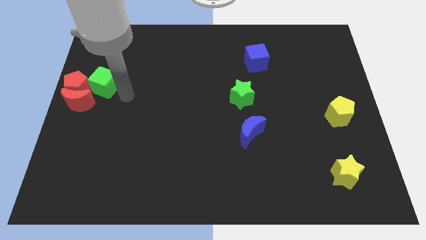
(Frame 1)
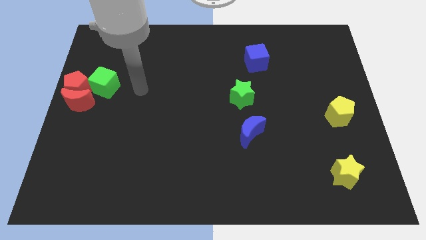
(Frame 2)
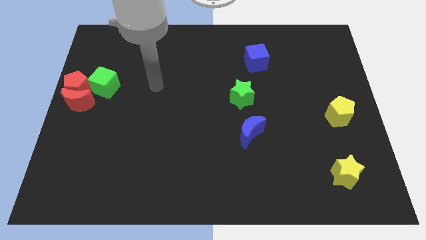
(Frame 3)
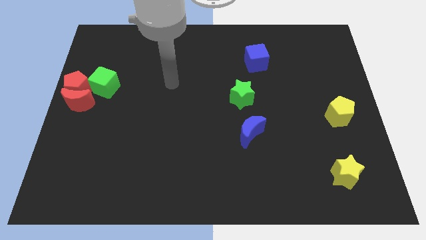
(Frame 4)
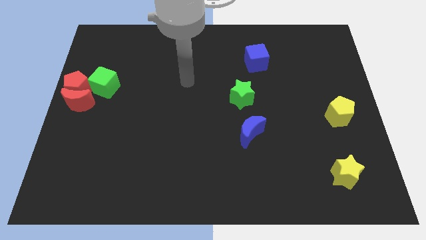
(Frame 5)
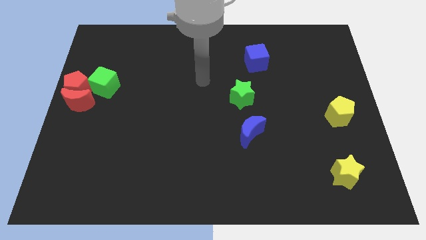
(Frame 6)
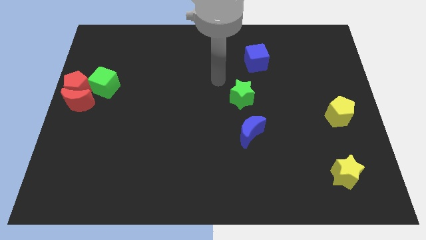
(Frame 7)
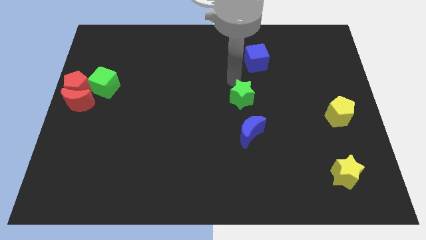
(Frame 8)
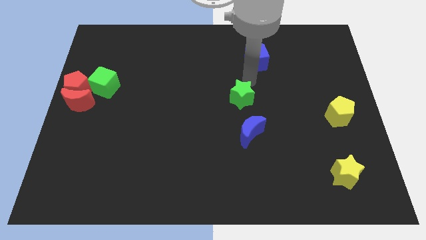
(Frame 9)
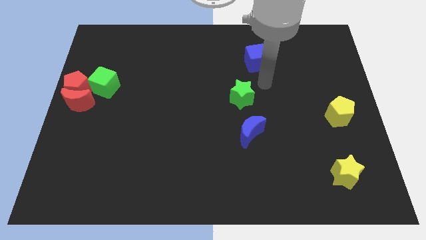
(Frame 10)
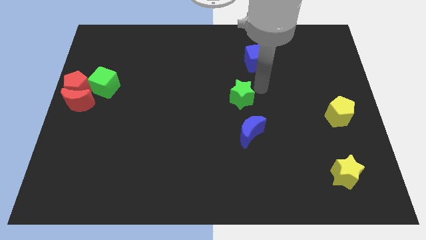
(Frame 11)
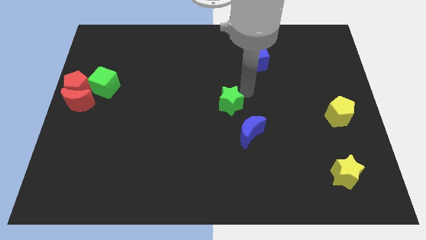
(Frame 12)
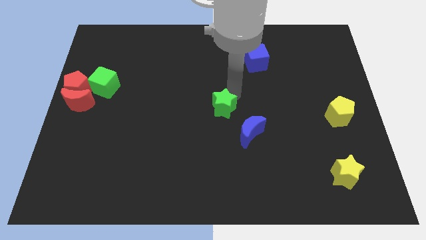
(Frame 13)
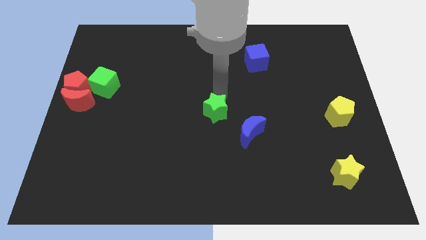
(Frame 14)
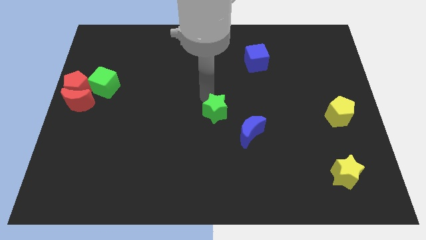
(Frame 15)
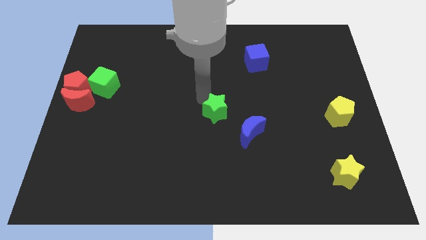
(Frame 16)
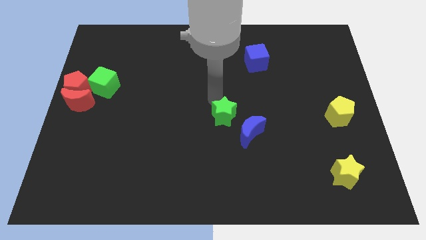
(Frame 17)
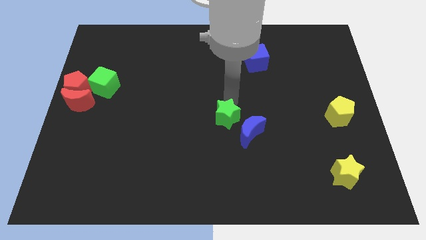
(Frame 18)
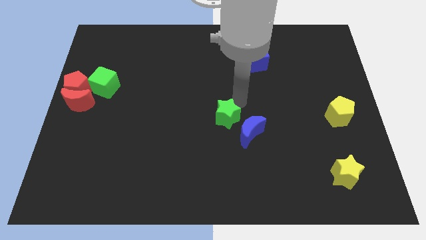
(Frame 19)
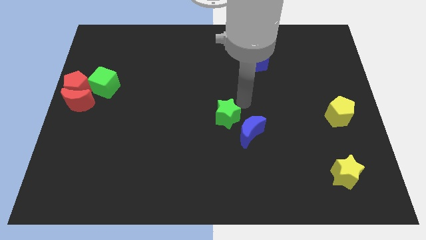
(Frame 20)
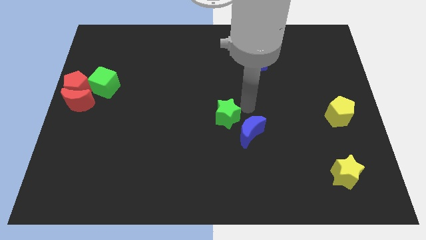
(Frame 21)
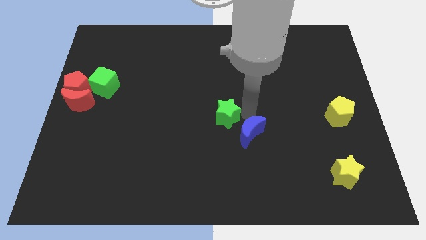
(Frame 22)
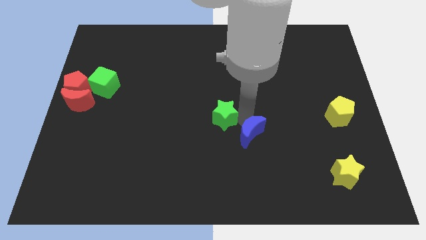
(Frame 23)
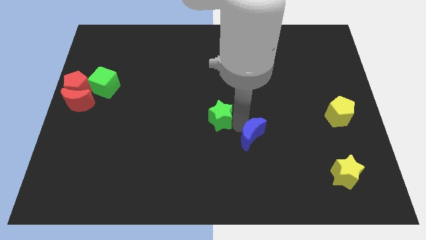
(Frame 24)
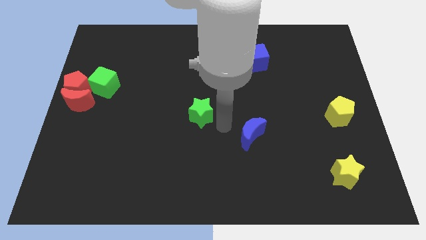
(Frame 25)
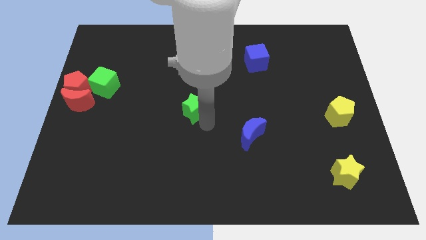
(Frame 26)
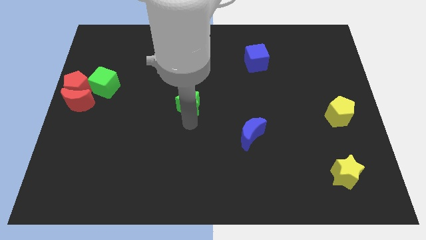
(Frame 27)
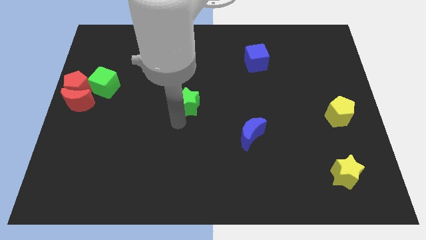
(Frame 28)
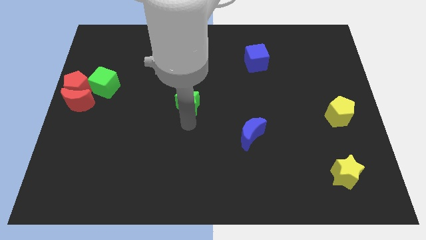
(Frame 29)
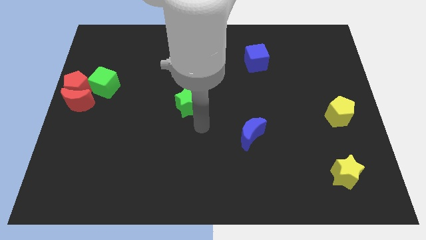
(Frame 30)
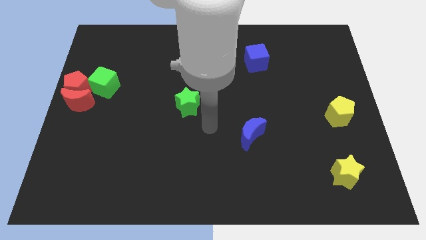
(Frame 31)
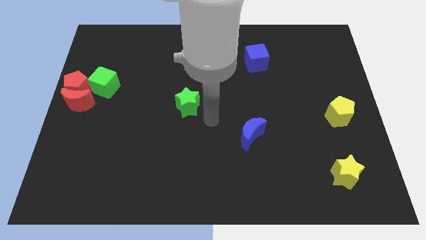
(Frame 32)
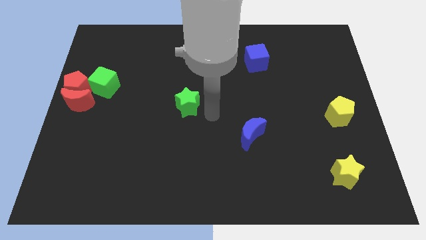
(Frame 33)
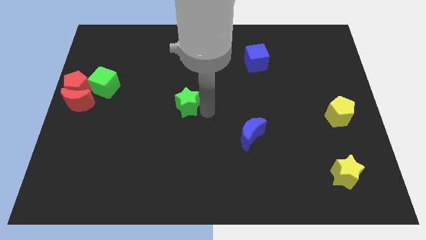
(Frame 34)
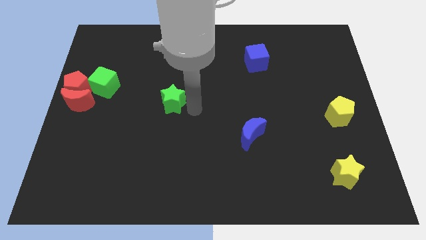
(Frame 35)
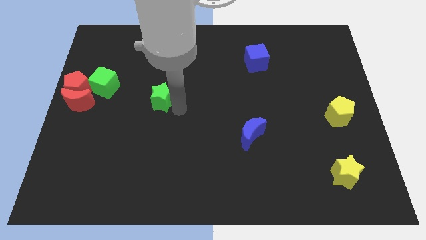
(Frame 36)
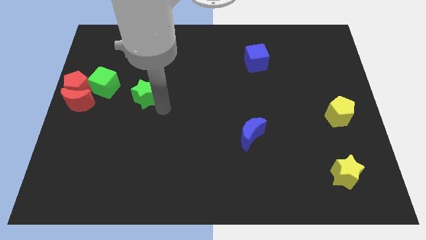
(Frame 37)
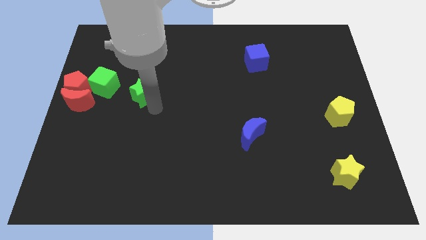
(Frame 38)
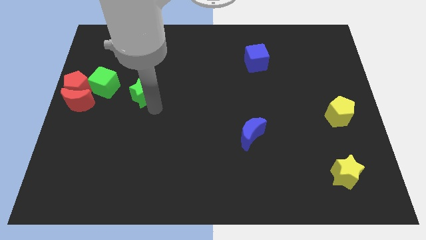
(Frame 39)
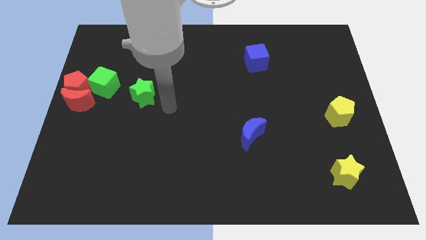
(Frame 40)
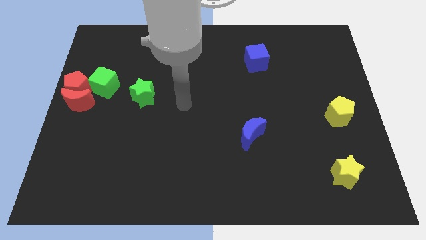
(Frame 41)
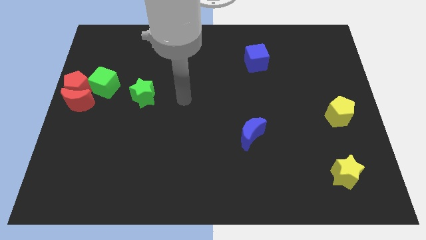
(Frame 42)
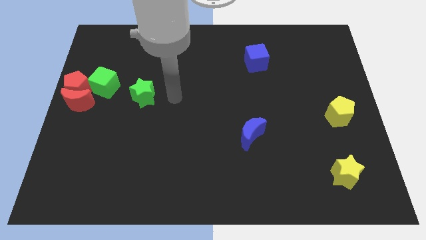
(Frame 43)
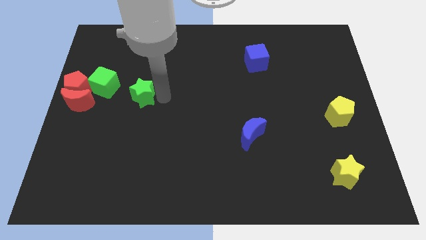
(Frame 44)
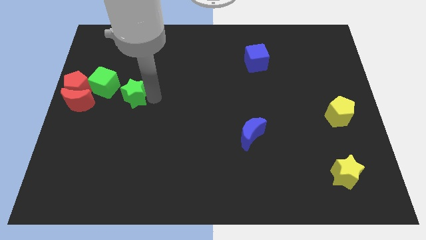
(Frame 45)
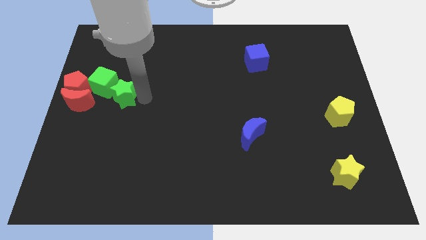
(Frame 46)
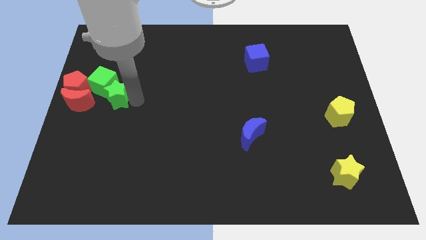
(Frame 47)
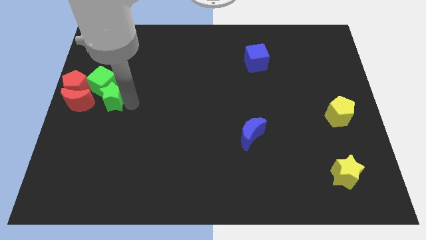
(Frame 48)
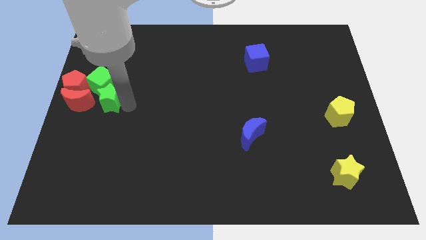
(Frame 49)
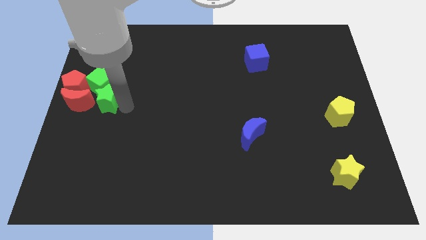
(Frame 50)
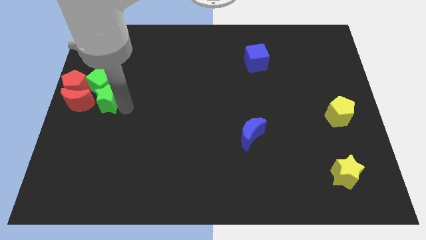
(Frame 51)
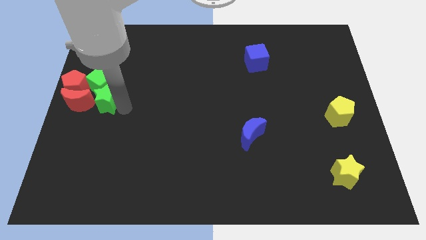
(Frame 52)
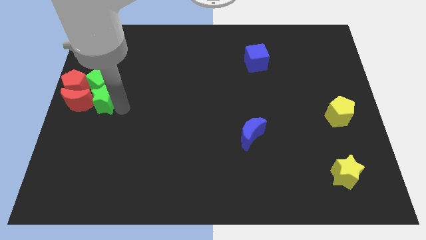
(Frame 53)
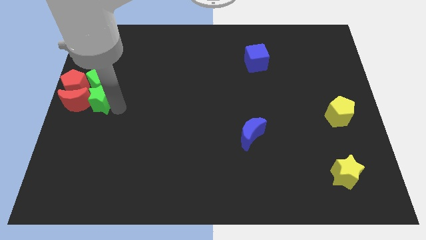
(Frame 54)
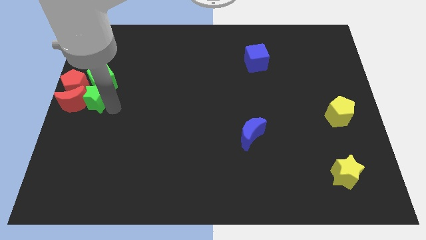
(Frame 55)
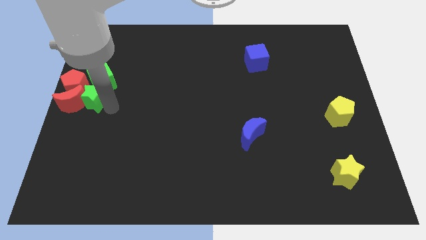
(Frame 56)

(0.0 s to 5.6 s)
move the green star into the group of blocks

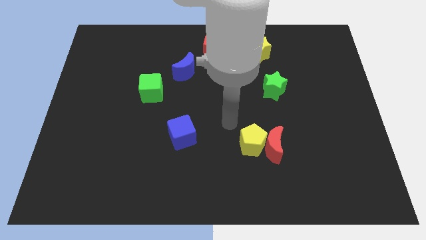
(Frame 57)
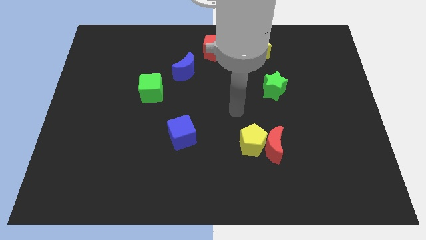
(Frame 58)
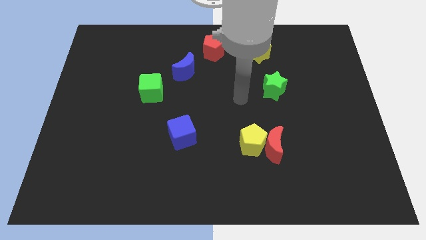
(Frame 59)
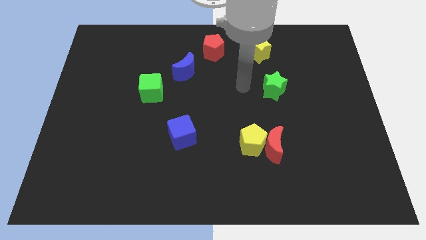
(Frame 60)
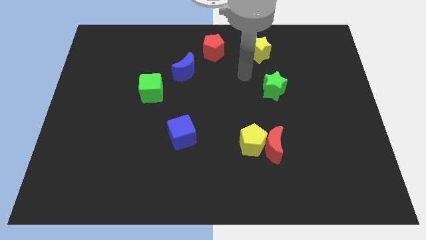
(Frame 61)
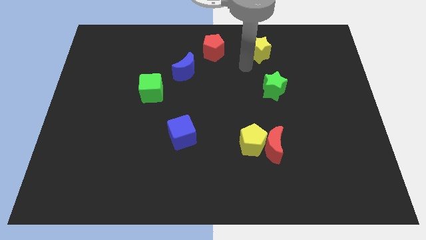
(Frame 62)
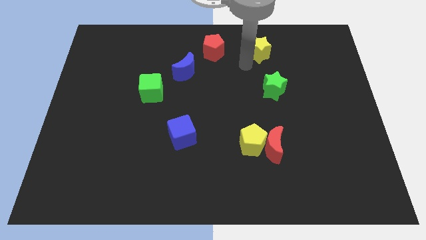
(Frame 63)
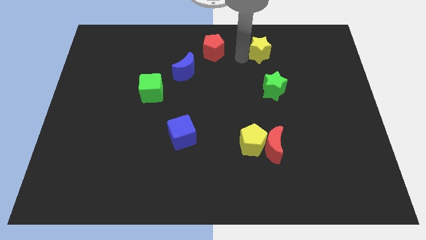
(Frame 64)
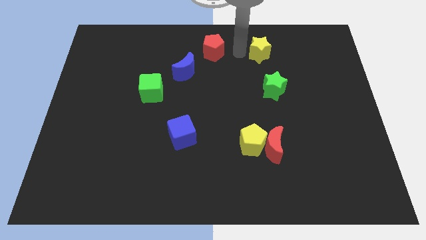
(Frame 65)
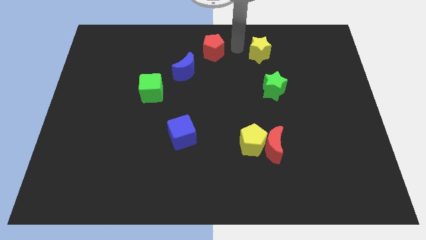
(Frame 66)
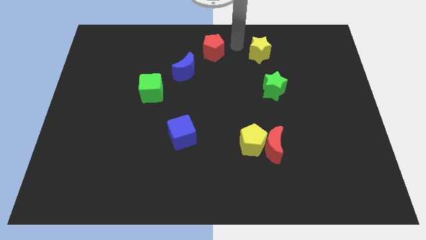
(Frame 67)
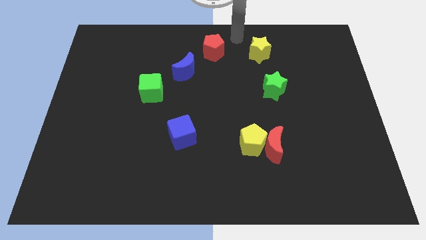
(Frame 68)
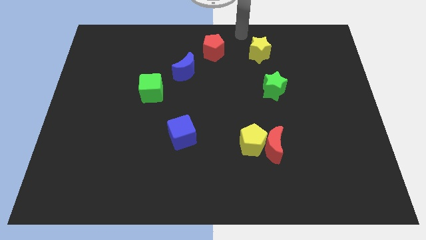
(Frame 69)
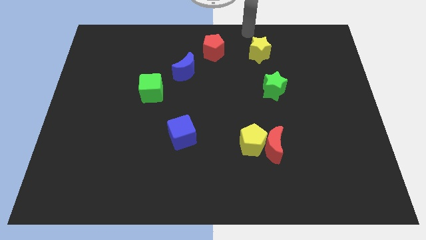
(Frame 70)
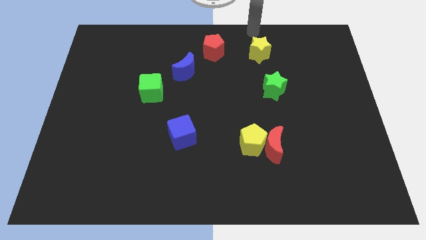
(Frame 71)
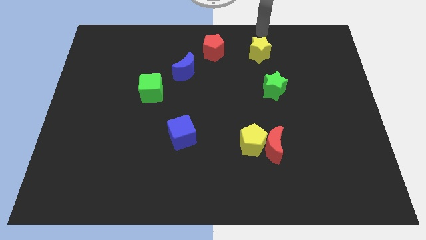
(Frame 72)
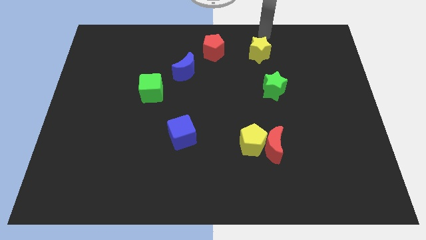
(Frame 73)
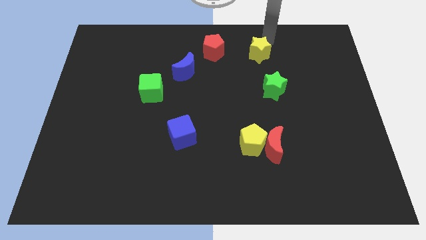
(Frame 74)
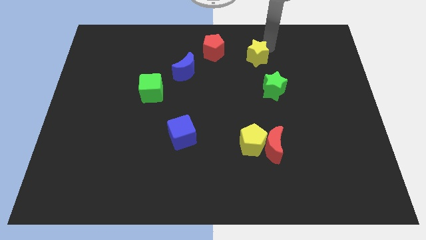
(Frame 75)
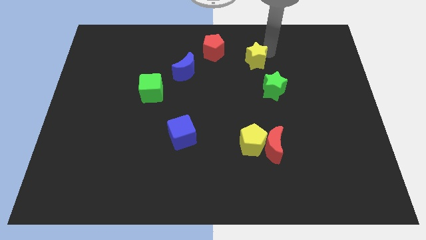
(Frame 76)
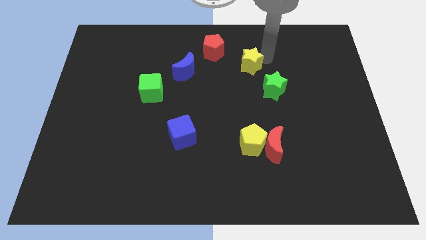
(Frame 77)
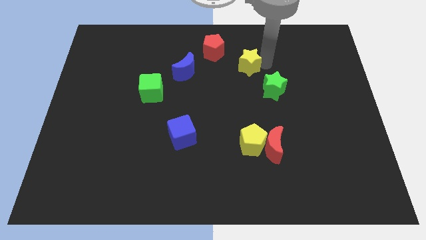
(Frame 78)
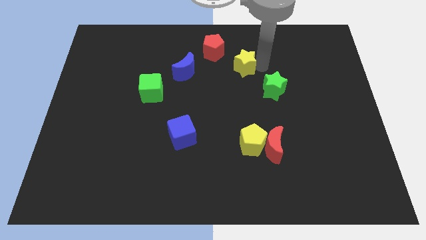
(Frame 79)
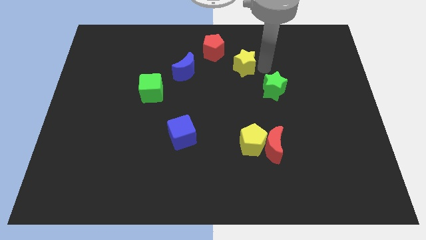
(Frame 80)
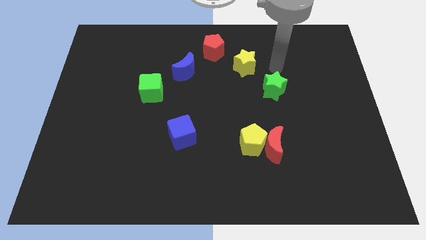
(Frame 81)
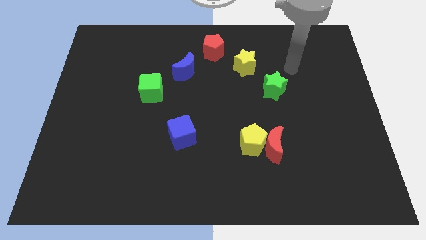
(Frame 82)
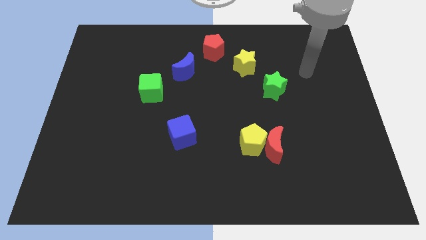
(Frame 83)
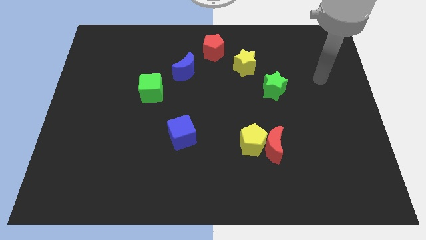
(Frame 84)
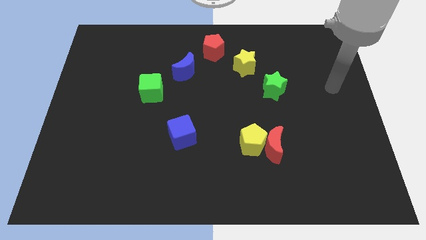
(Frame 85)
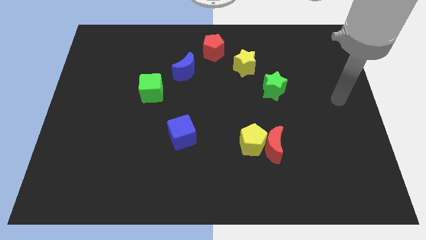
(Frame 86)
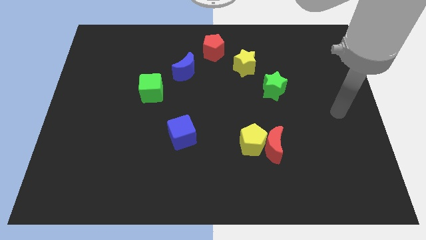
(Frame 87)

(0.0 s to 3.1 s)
place the yellow star diagonally in between the red pentagon and green star

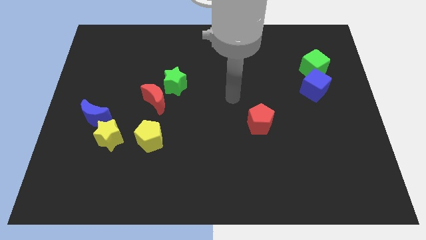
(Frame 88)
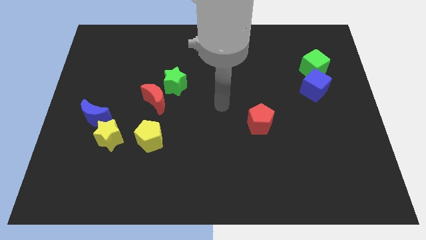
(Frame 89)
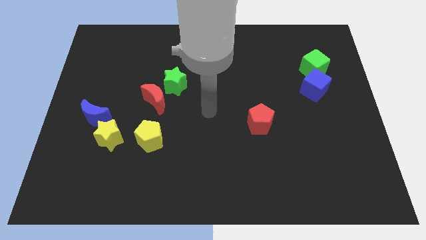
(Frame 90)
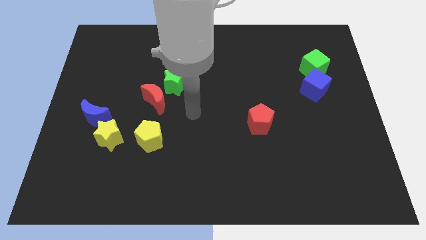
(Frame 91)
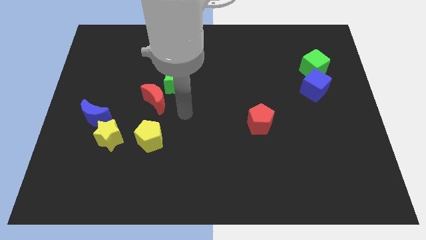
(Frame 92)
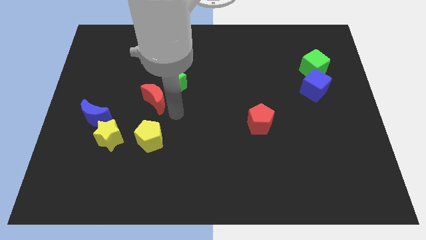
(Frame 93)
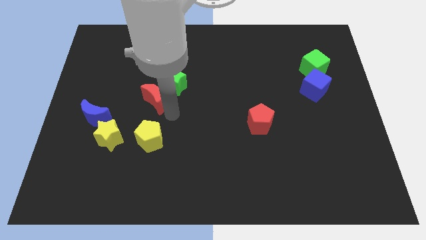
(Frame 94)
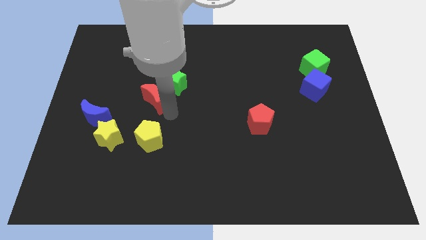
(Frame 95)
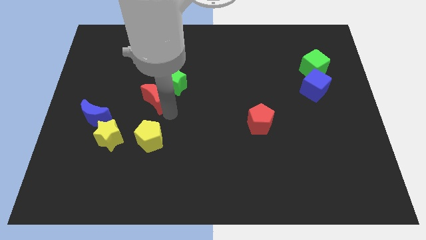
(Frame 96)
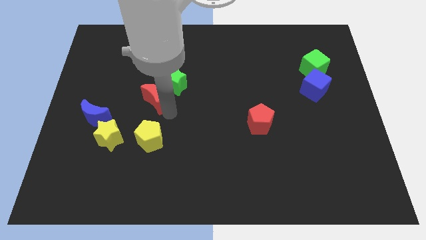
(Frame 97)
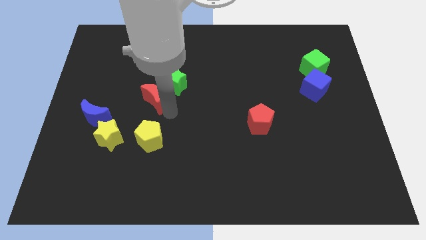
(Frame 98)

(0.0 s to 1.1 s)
move the arm to the bottom of the red moon
